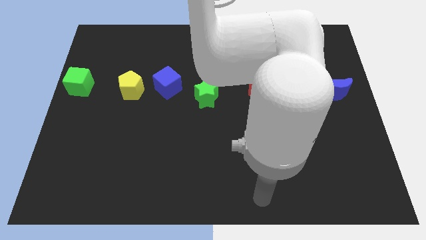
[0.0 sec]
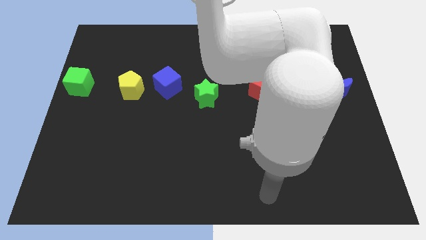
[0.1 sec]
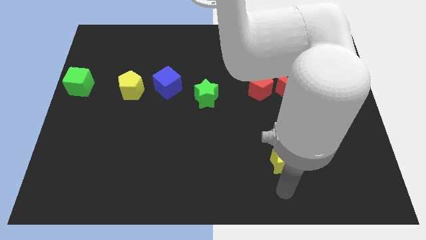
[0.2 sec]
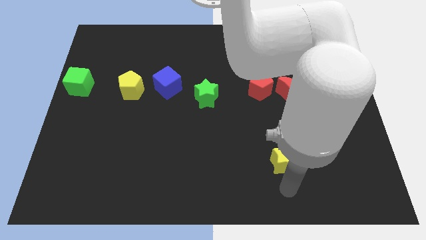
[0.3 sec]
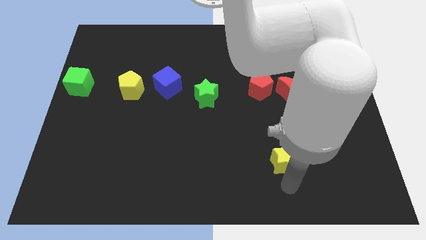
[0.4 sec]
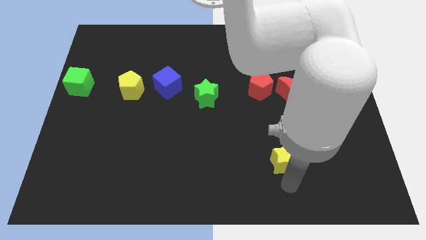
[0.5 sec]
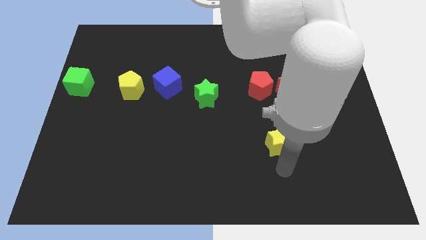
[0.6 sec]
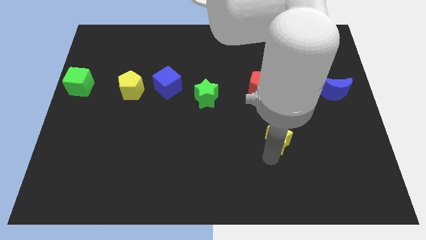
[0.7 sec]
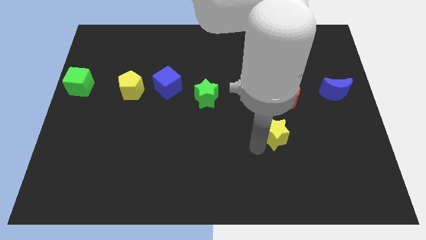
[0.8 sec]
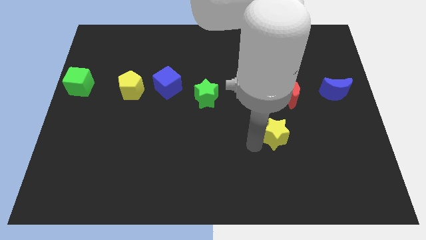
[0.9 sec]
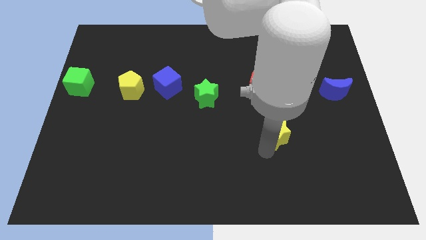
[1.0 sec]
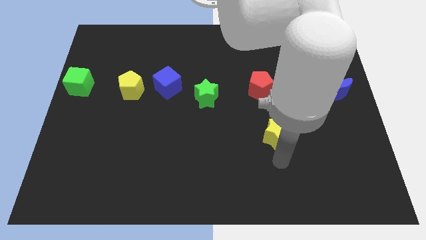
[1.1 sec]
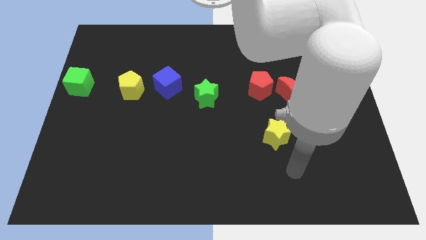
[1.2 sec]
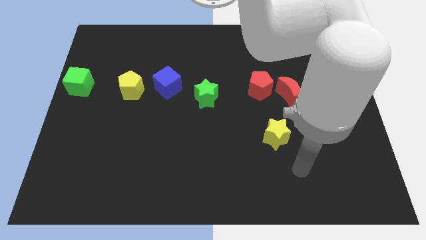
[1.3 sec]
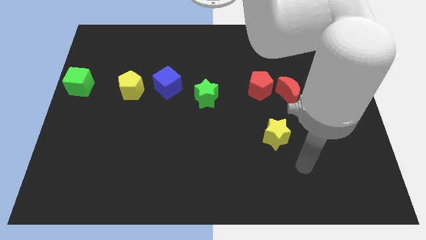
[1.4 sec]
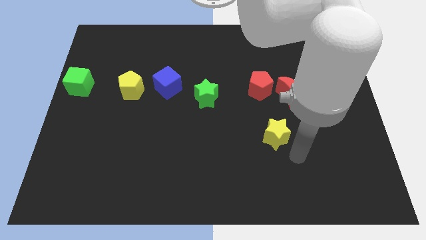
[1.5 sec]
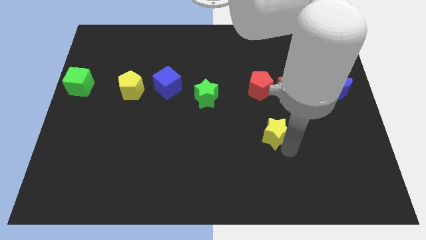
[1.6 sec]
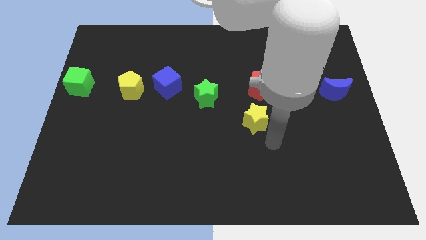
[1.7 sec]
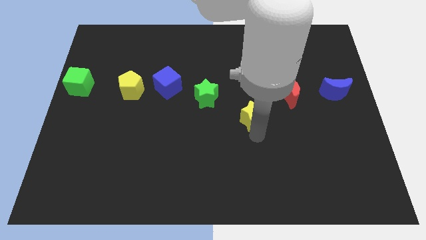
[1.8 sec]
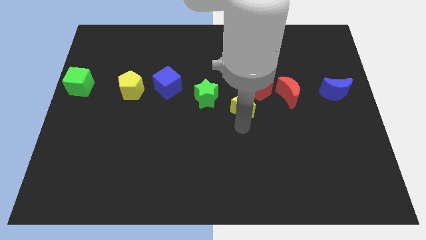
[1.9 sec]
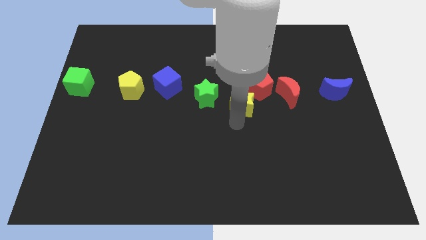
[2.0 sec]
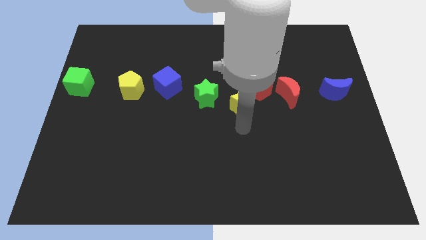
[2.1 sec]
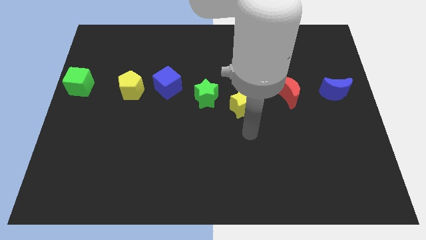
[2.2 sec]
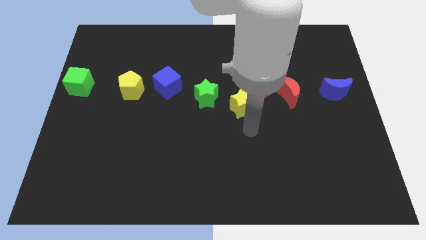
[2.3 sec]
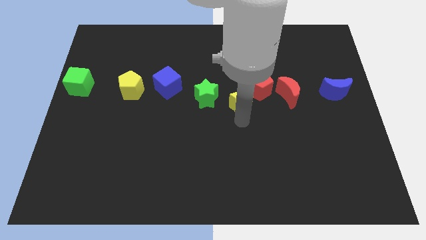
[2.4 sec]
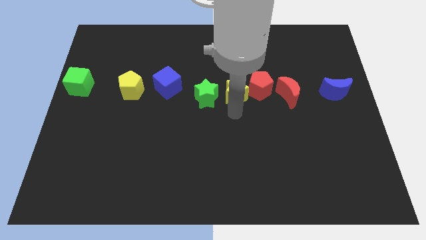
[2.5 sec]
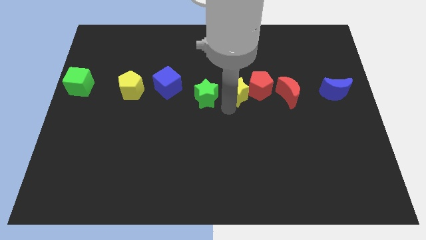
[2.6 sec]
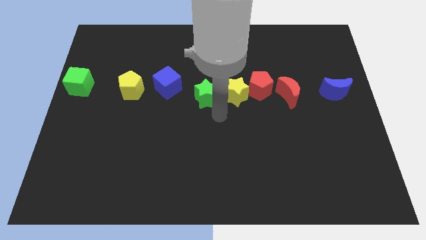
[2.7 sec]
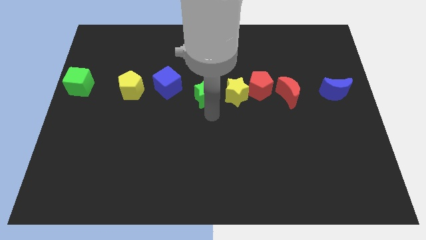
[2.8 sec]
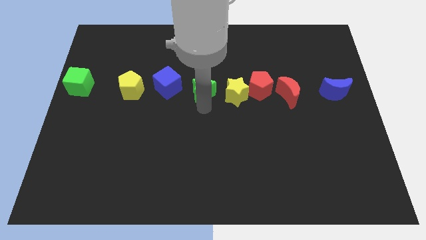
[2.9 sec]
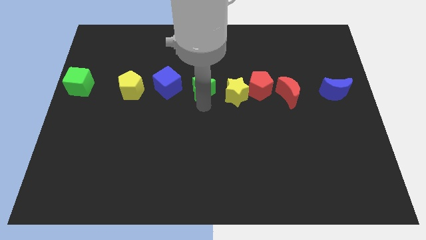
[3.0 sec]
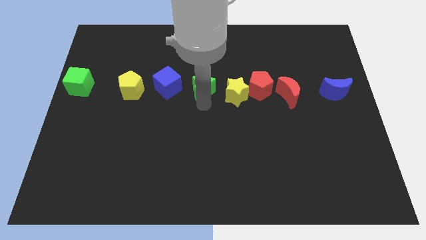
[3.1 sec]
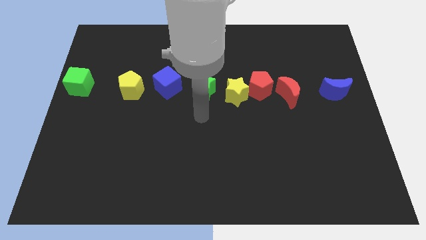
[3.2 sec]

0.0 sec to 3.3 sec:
place the yellow star in between the red pentagon and green star

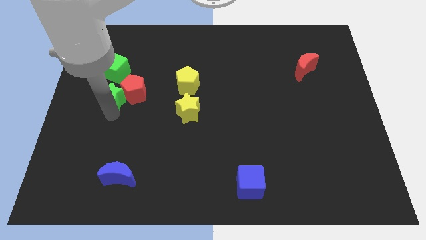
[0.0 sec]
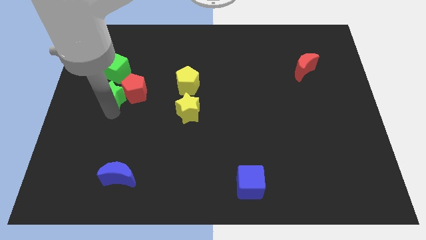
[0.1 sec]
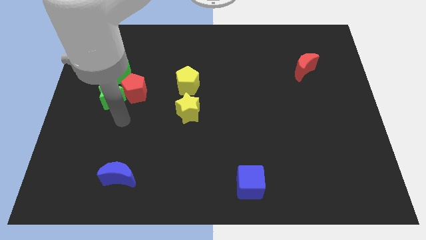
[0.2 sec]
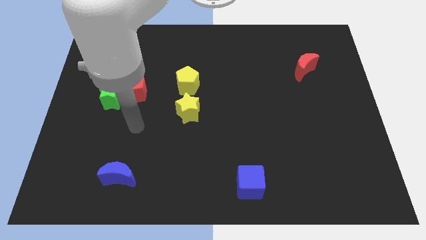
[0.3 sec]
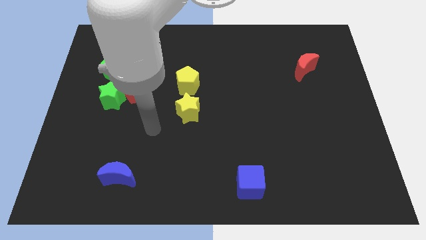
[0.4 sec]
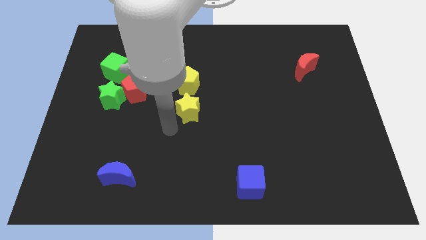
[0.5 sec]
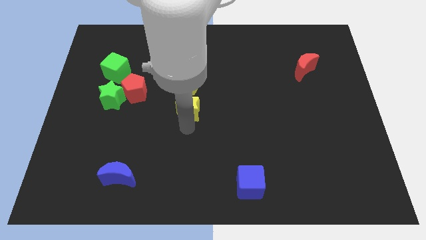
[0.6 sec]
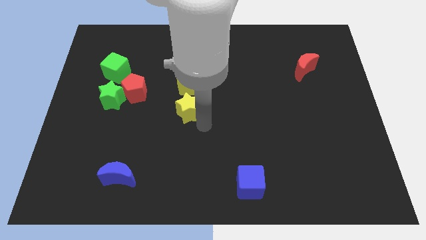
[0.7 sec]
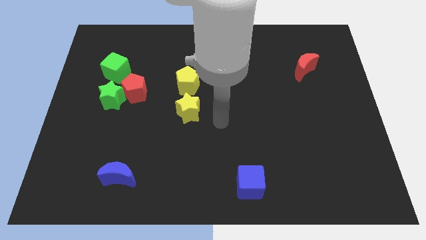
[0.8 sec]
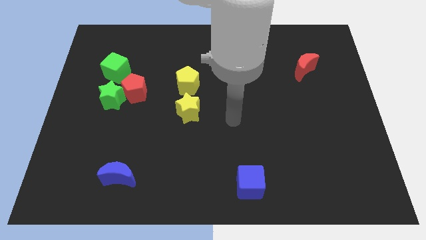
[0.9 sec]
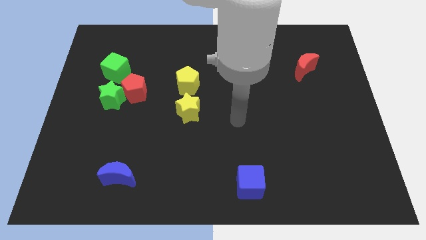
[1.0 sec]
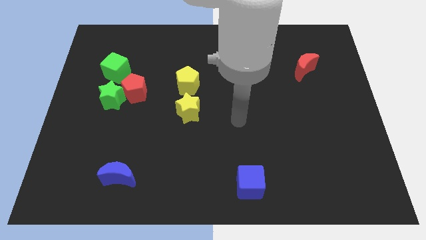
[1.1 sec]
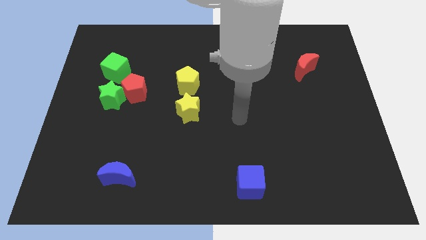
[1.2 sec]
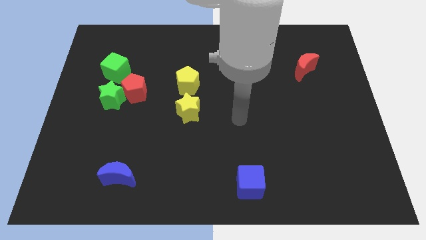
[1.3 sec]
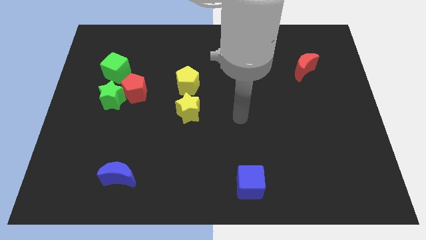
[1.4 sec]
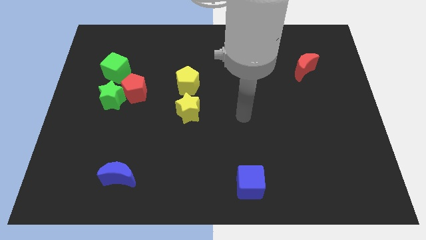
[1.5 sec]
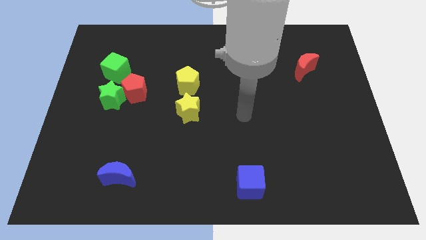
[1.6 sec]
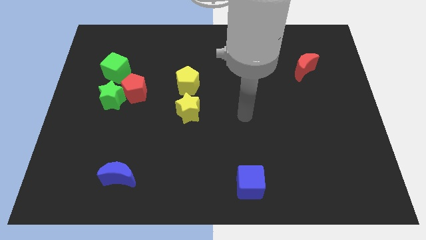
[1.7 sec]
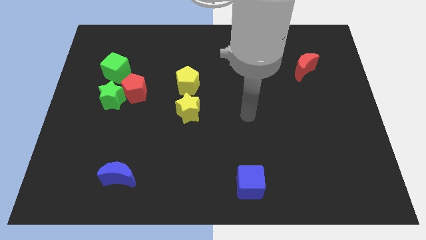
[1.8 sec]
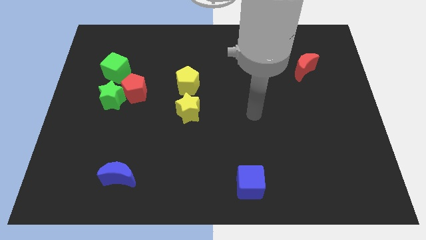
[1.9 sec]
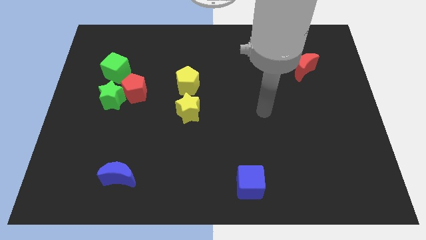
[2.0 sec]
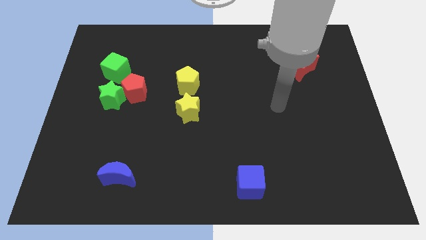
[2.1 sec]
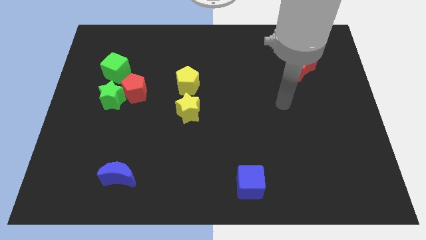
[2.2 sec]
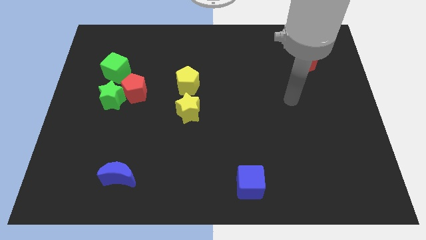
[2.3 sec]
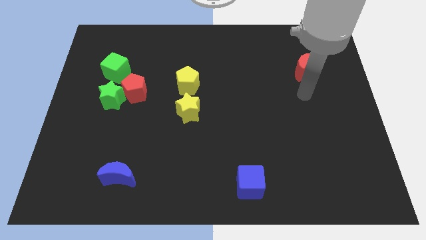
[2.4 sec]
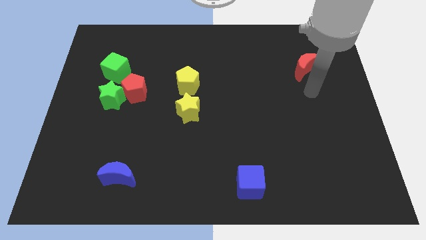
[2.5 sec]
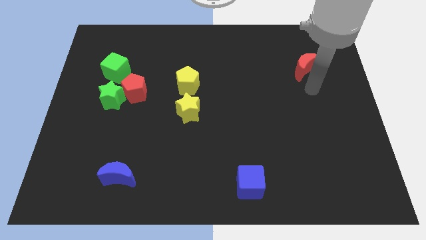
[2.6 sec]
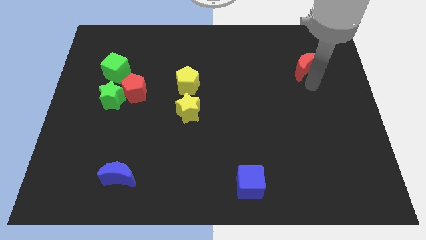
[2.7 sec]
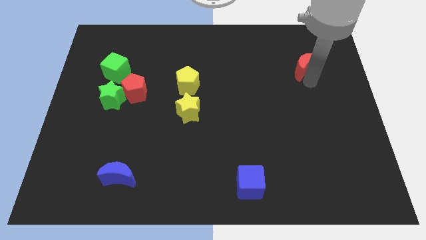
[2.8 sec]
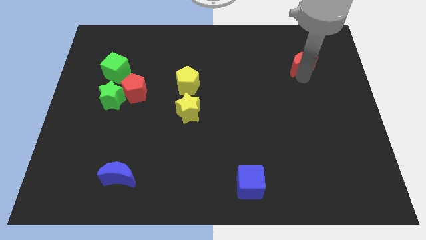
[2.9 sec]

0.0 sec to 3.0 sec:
touch the red moon

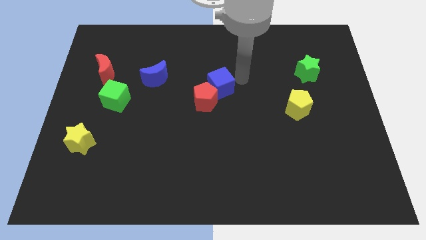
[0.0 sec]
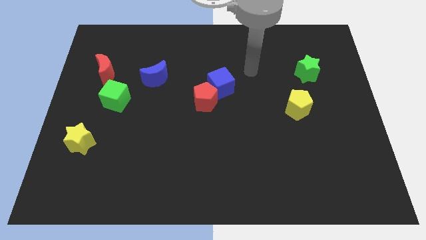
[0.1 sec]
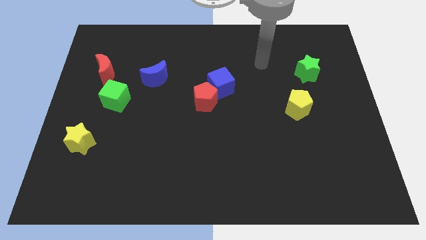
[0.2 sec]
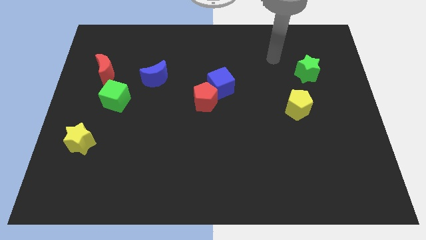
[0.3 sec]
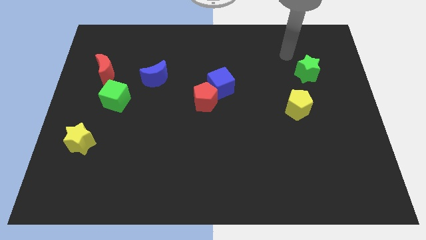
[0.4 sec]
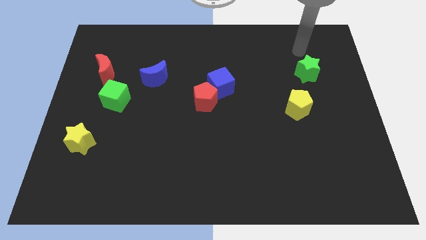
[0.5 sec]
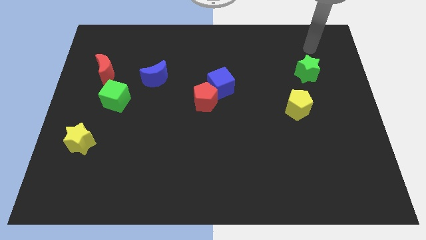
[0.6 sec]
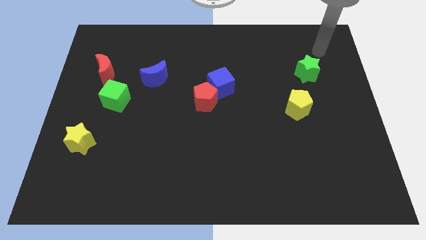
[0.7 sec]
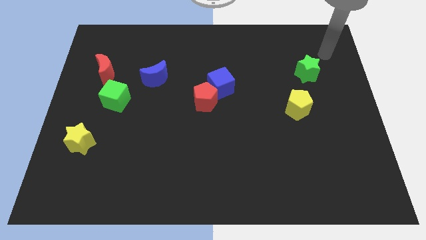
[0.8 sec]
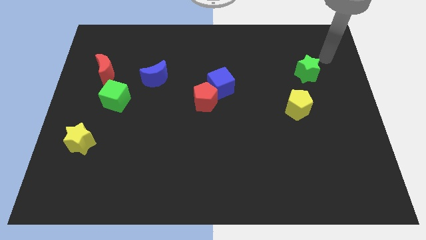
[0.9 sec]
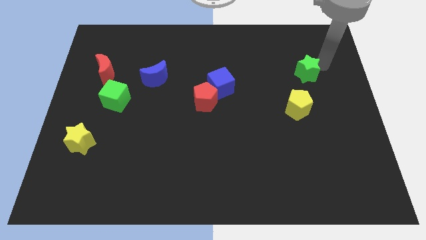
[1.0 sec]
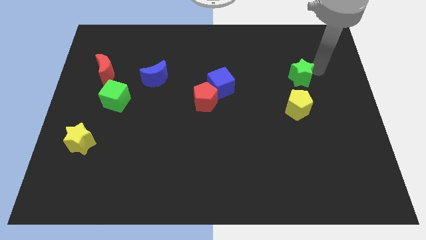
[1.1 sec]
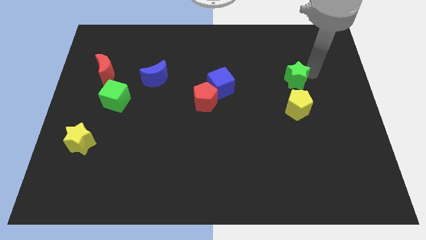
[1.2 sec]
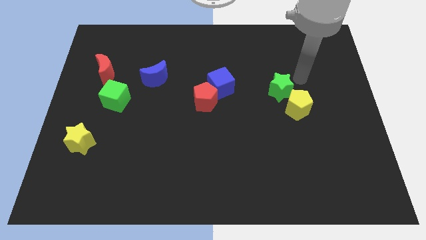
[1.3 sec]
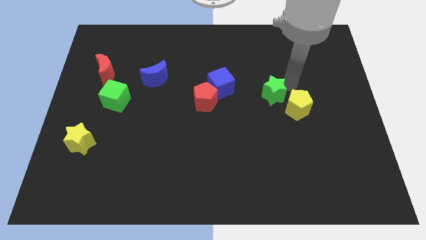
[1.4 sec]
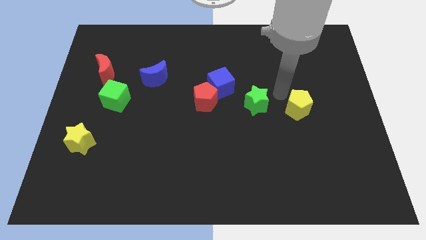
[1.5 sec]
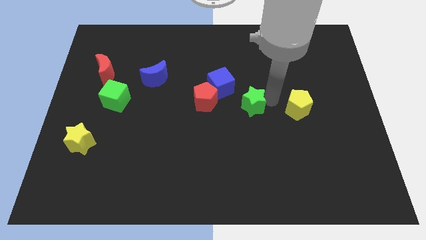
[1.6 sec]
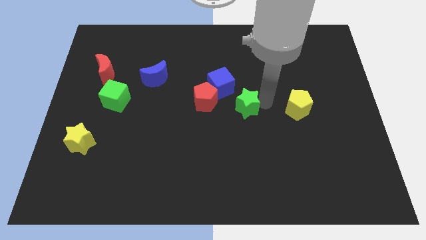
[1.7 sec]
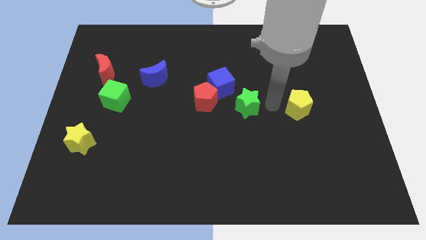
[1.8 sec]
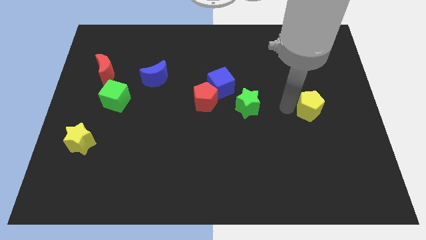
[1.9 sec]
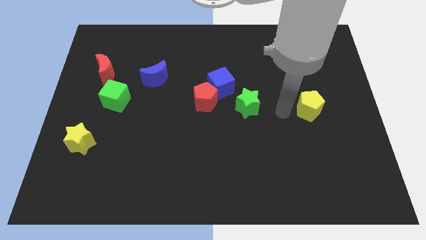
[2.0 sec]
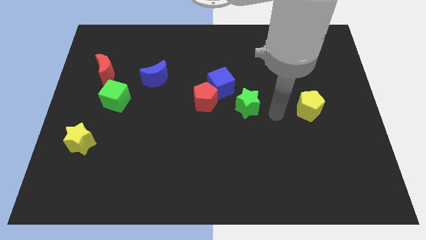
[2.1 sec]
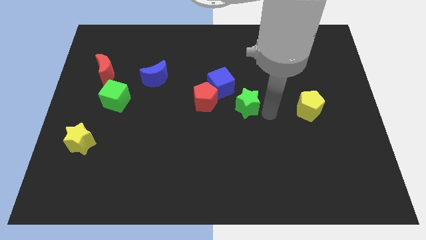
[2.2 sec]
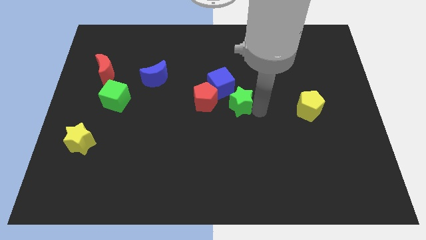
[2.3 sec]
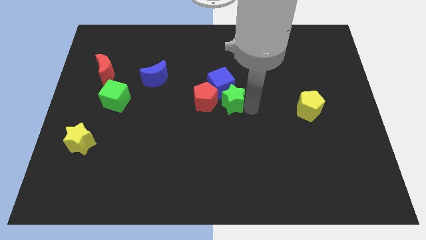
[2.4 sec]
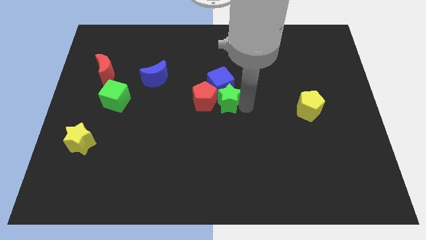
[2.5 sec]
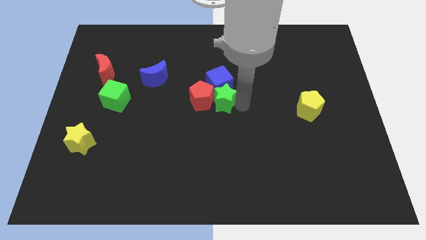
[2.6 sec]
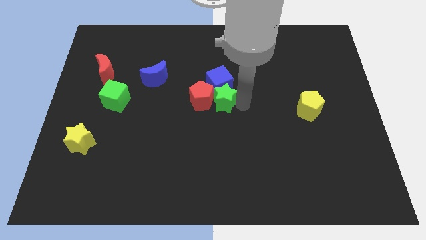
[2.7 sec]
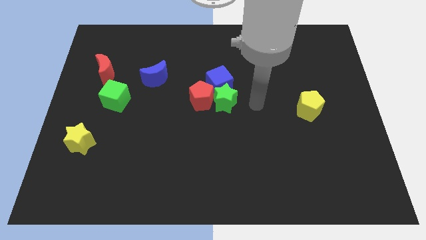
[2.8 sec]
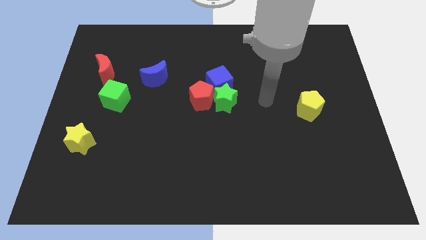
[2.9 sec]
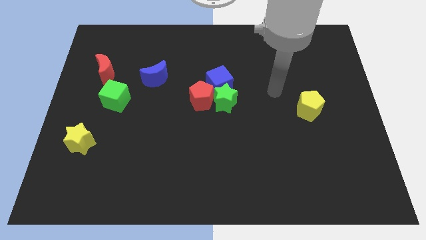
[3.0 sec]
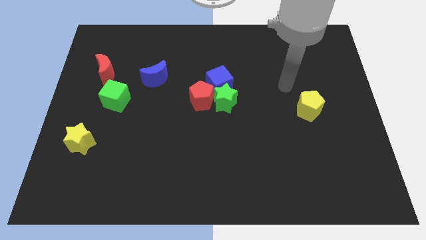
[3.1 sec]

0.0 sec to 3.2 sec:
move the green star into the red pentagon
